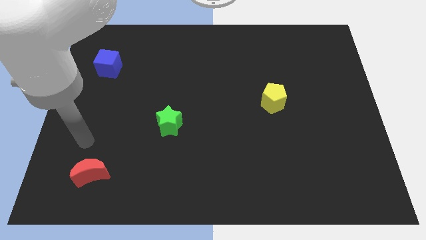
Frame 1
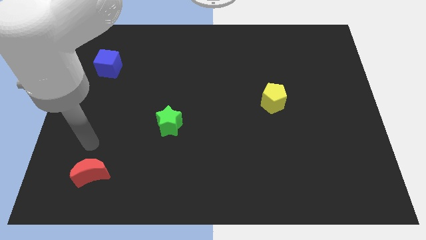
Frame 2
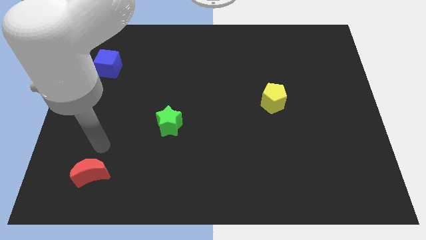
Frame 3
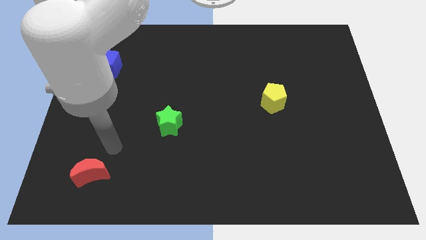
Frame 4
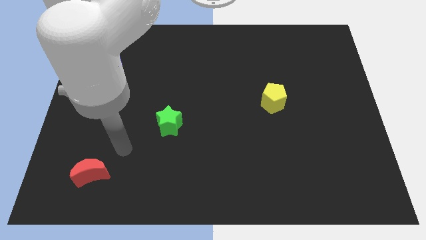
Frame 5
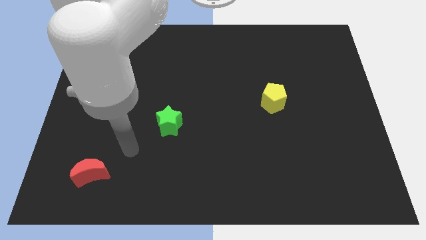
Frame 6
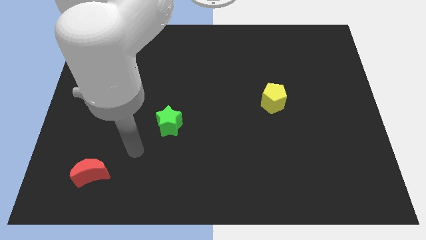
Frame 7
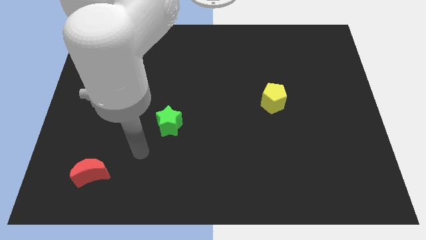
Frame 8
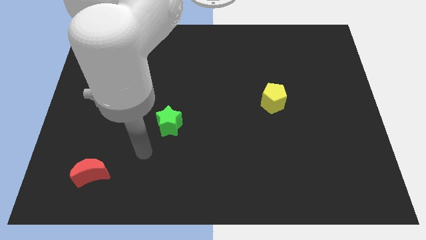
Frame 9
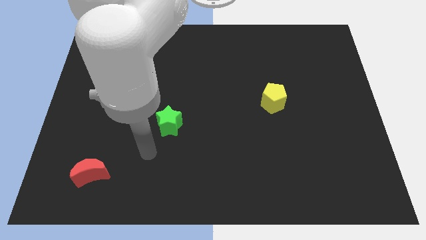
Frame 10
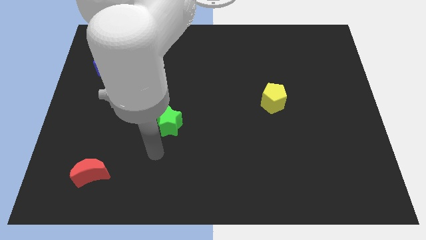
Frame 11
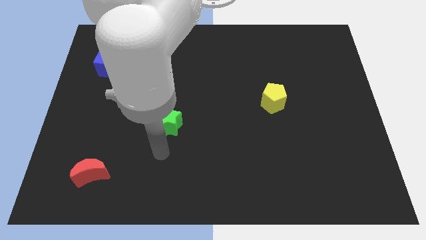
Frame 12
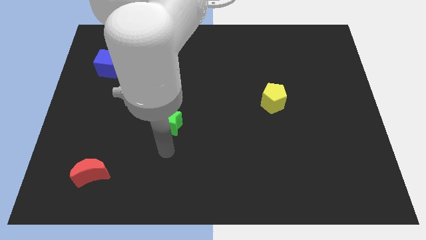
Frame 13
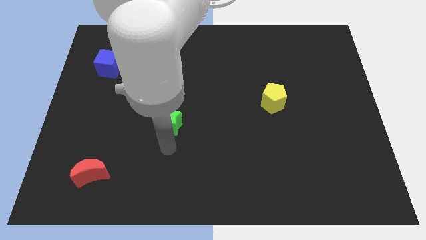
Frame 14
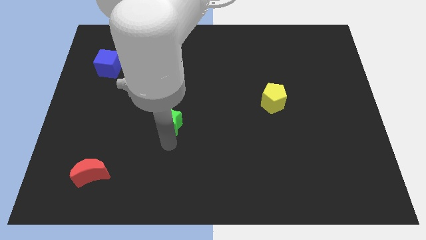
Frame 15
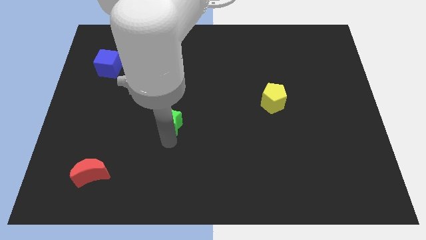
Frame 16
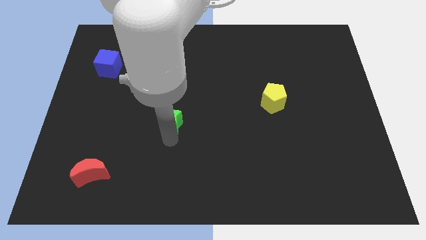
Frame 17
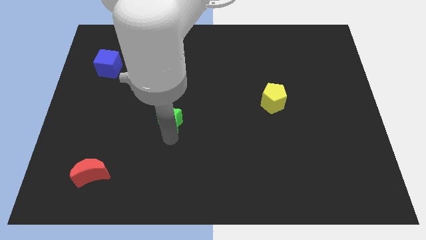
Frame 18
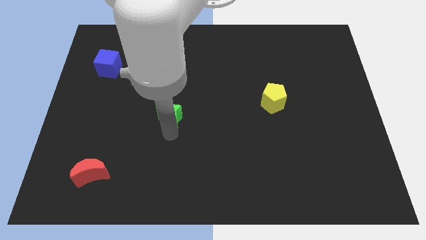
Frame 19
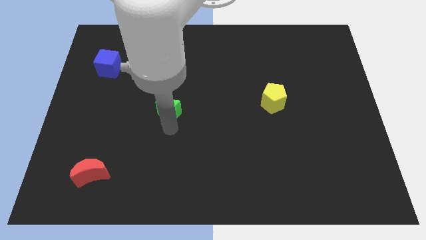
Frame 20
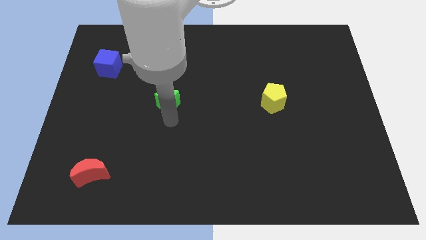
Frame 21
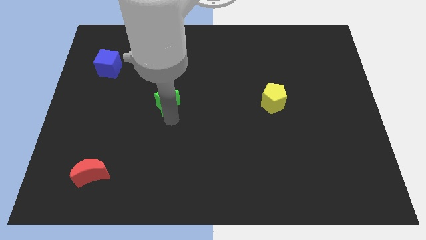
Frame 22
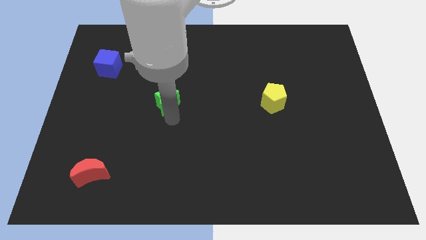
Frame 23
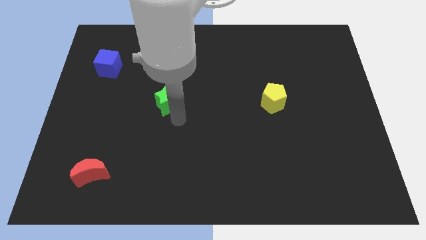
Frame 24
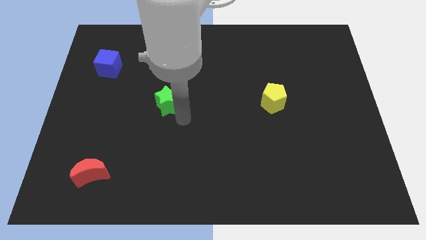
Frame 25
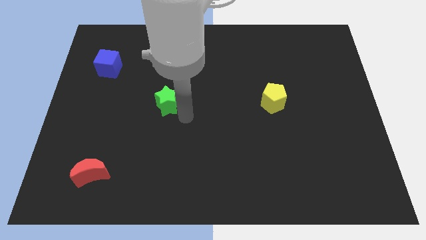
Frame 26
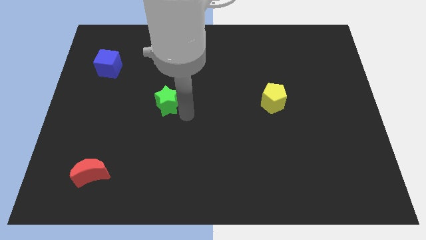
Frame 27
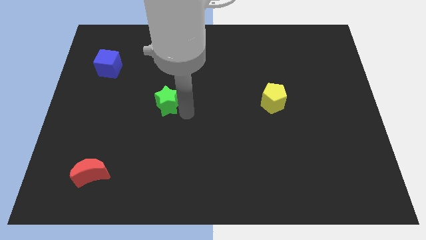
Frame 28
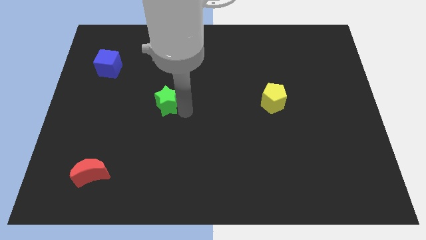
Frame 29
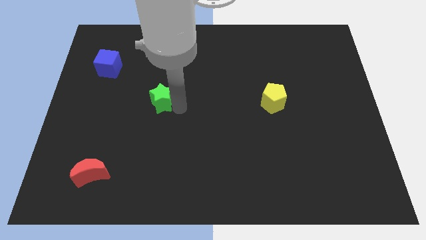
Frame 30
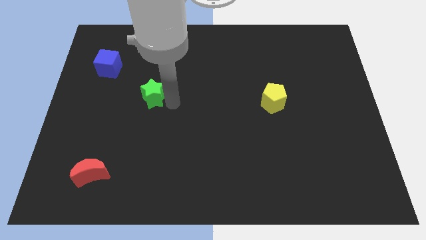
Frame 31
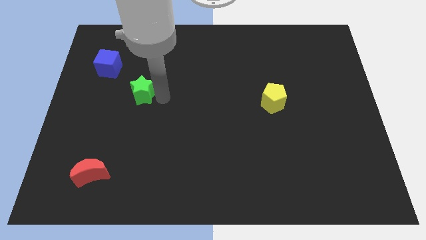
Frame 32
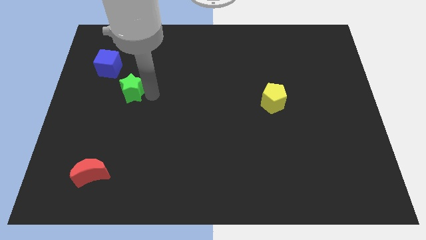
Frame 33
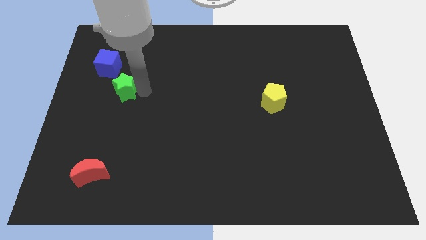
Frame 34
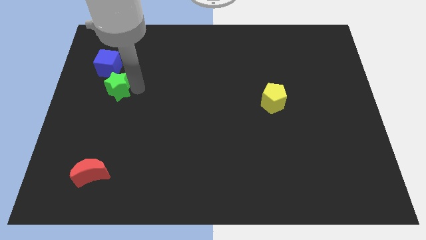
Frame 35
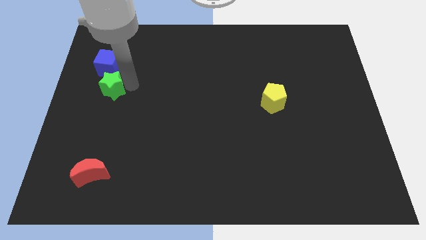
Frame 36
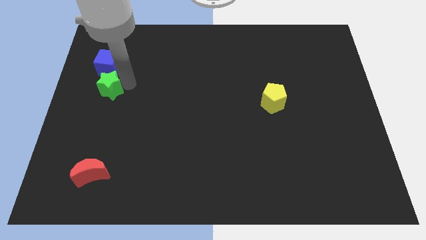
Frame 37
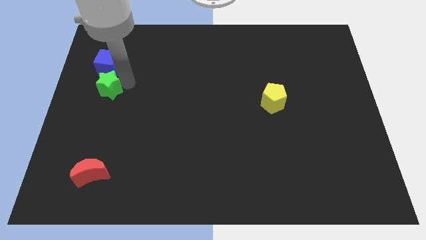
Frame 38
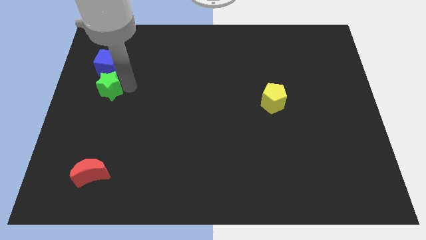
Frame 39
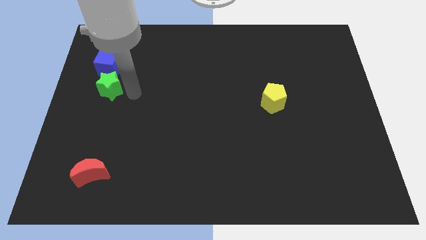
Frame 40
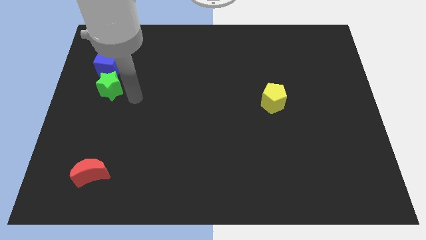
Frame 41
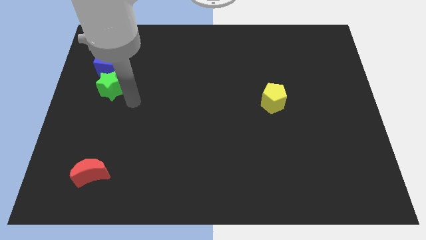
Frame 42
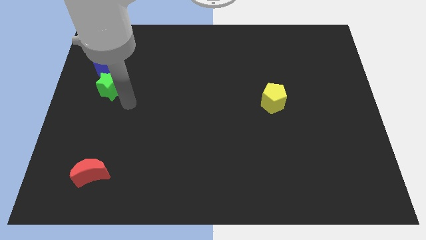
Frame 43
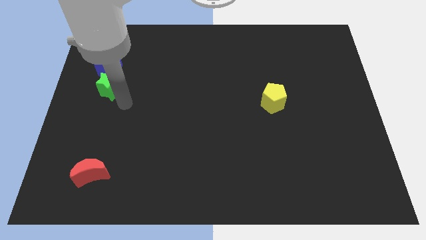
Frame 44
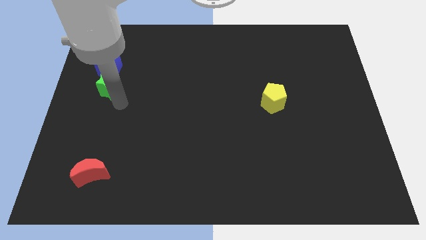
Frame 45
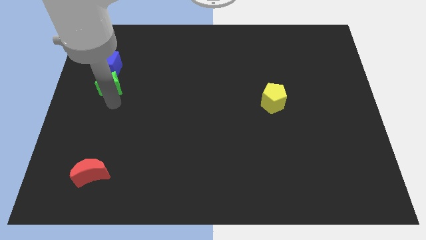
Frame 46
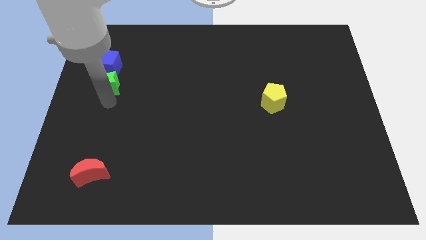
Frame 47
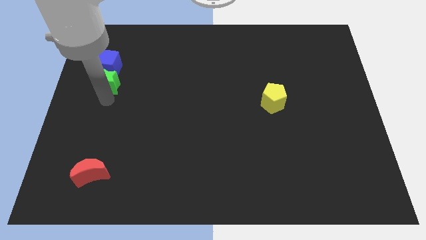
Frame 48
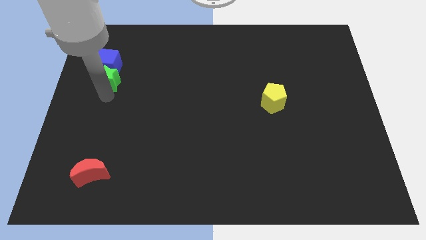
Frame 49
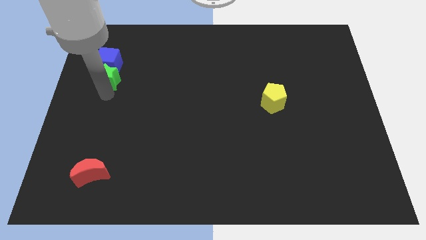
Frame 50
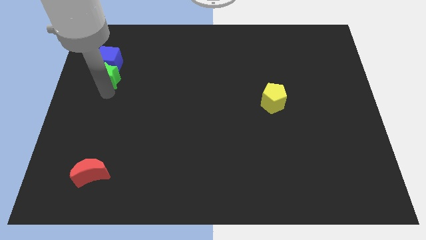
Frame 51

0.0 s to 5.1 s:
slide the star to the cube

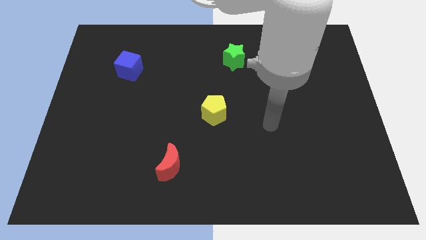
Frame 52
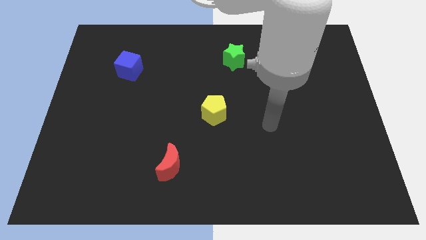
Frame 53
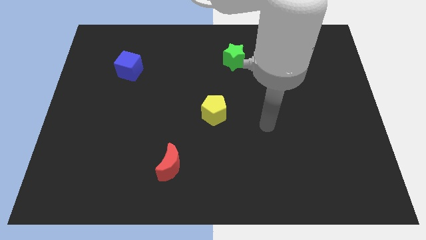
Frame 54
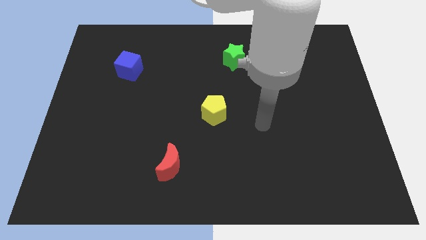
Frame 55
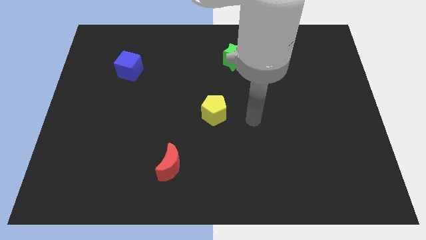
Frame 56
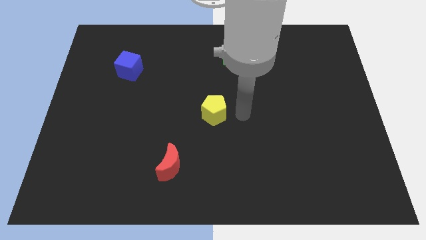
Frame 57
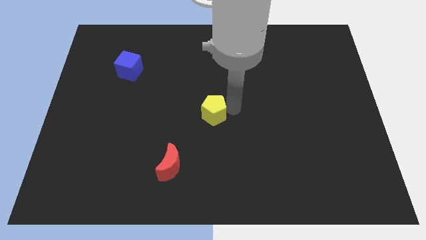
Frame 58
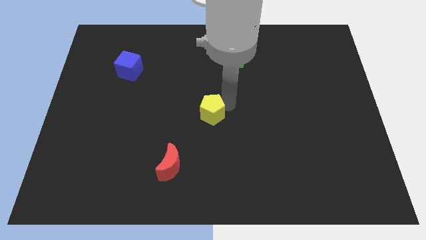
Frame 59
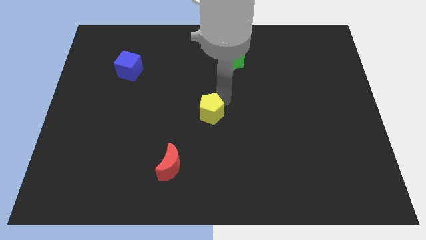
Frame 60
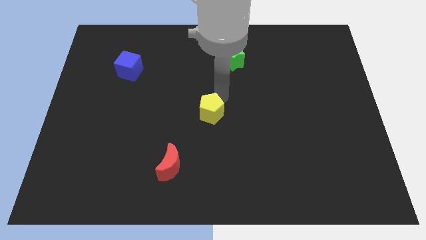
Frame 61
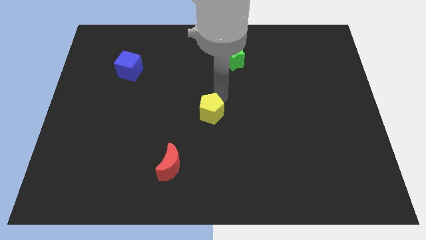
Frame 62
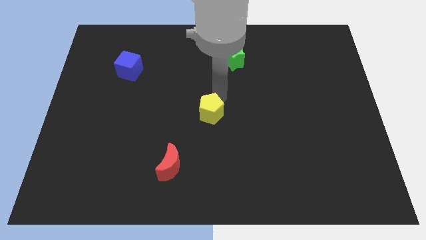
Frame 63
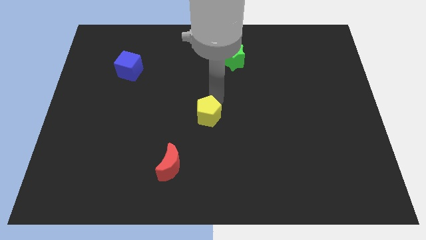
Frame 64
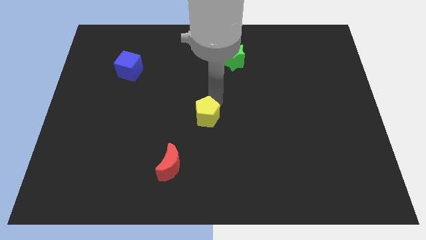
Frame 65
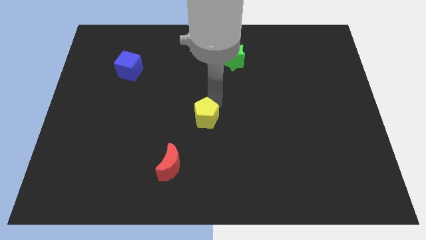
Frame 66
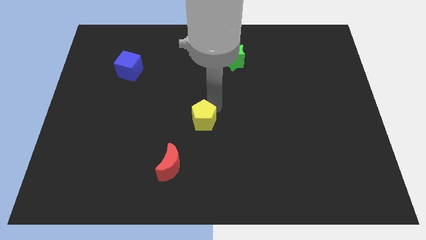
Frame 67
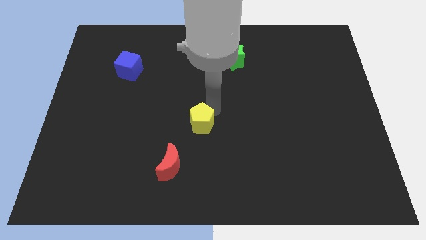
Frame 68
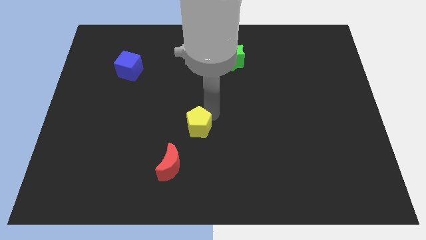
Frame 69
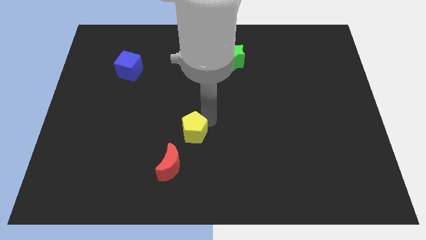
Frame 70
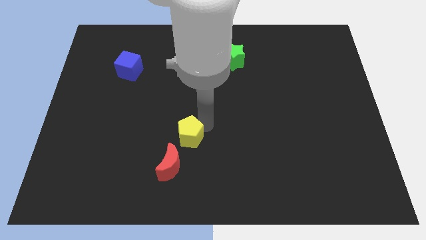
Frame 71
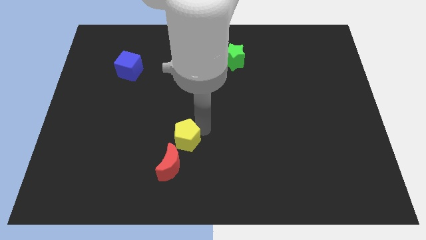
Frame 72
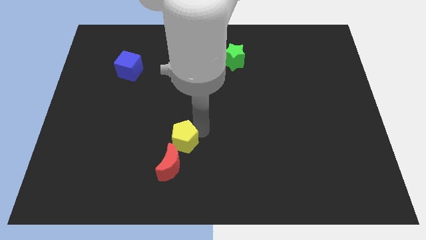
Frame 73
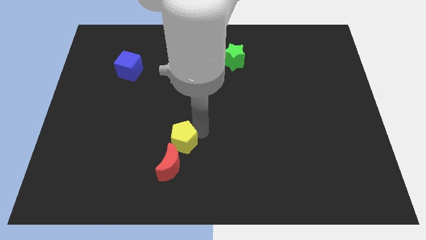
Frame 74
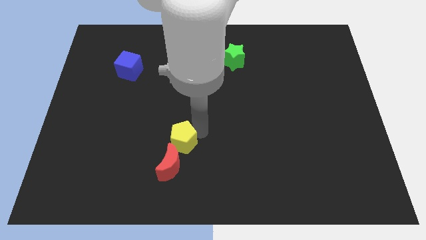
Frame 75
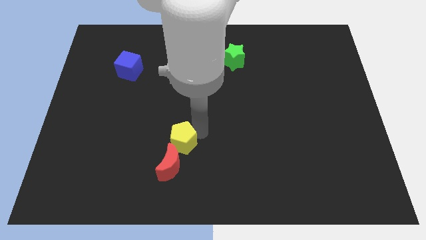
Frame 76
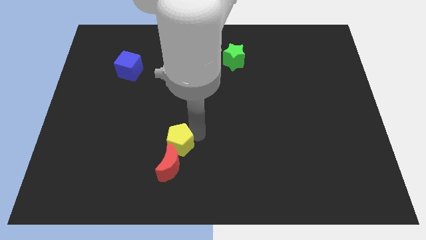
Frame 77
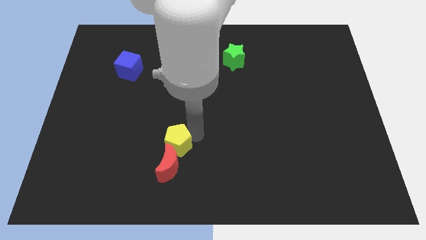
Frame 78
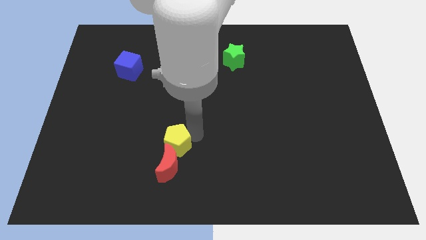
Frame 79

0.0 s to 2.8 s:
put the pentagon towards the red block

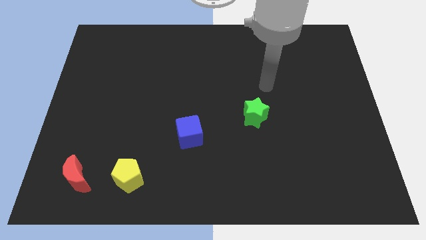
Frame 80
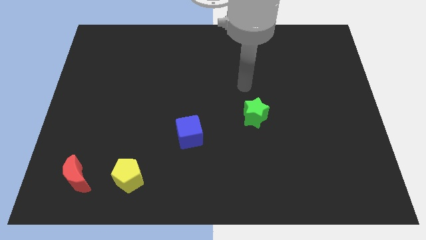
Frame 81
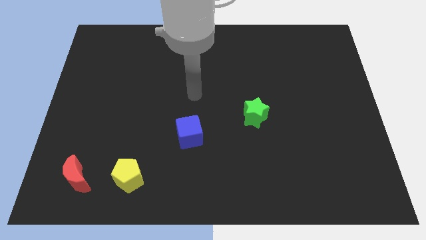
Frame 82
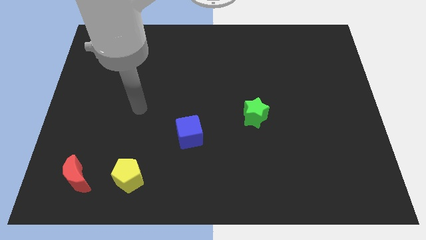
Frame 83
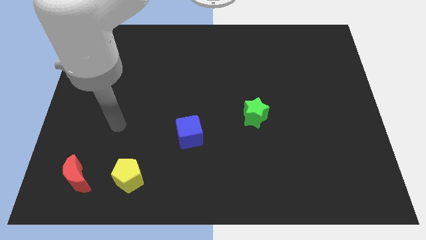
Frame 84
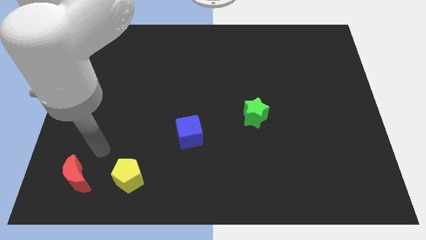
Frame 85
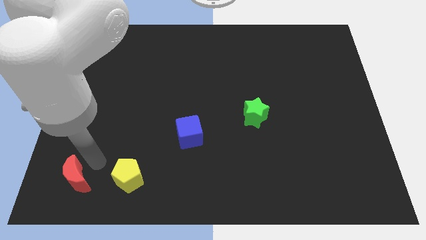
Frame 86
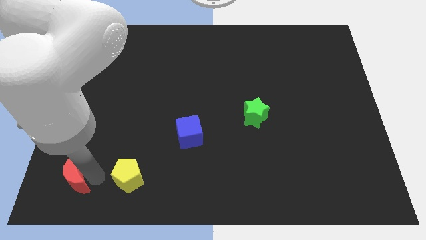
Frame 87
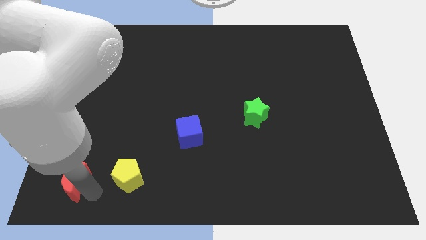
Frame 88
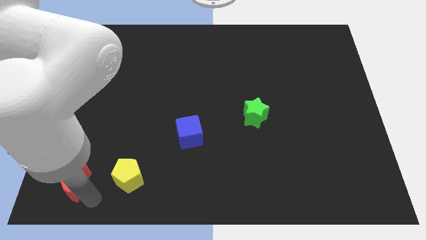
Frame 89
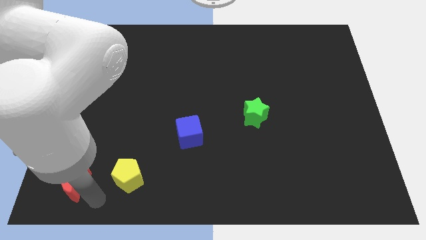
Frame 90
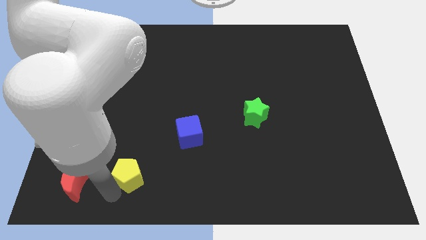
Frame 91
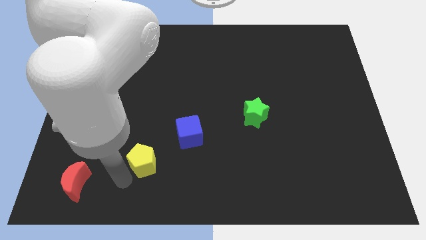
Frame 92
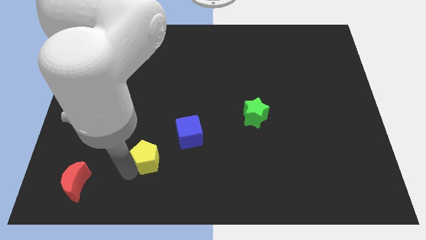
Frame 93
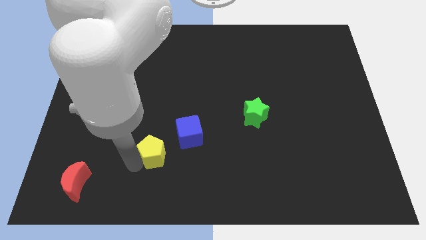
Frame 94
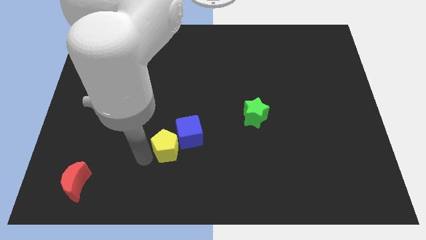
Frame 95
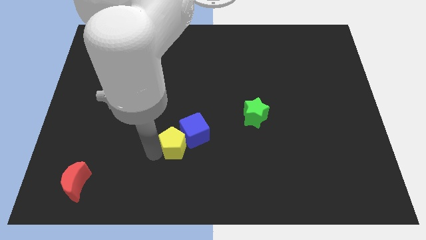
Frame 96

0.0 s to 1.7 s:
slide the yellow pentagon towards the cube
